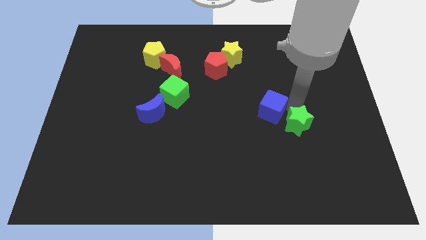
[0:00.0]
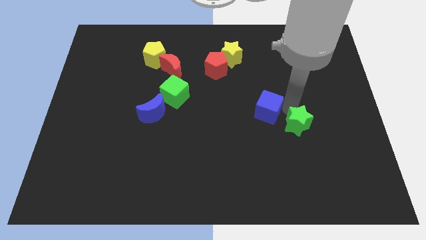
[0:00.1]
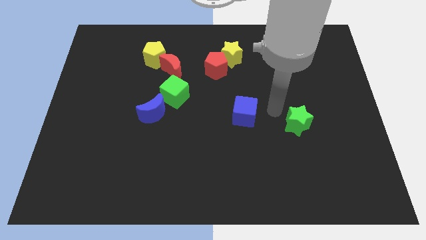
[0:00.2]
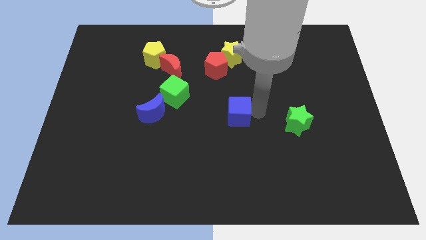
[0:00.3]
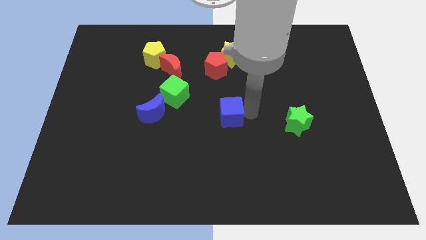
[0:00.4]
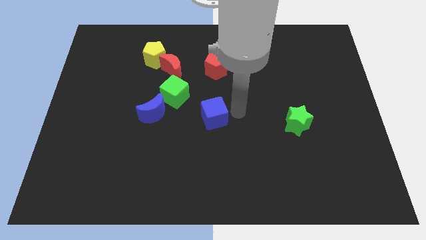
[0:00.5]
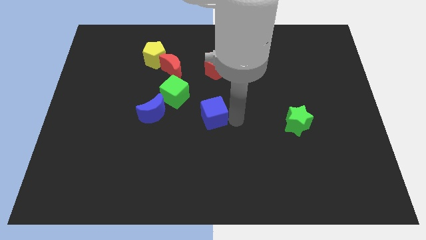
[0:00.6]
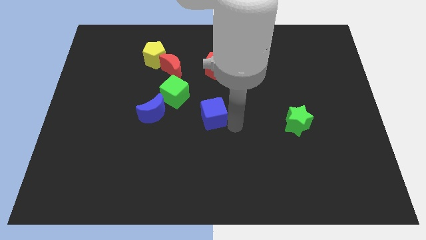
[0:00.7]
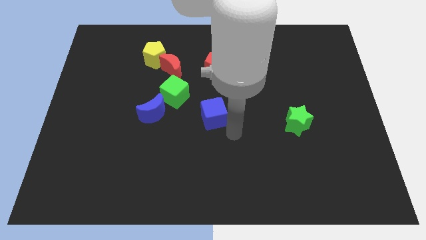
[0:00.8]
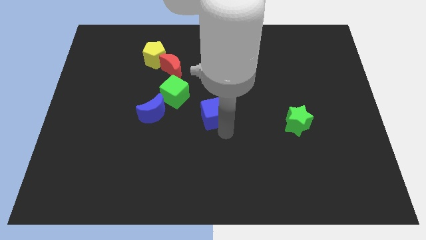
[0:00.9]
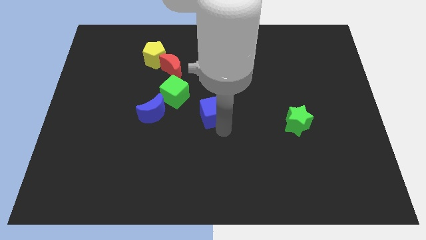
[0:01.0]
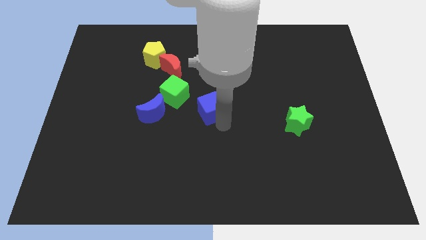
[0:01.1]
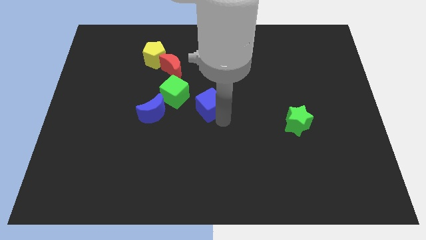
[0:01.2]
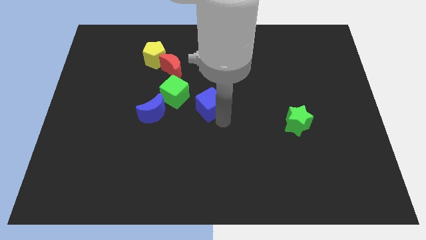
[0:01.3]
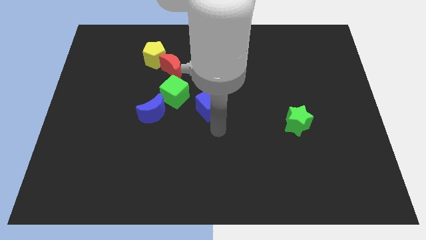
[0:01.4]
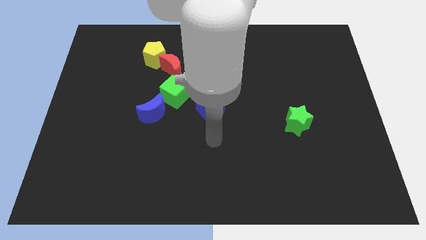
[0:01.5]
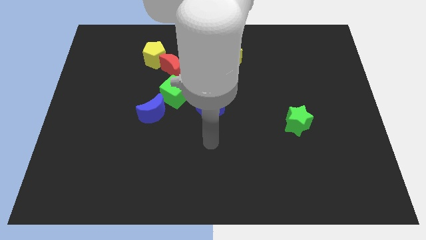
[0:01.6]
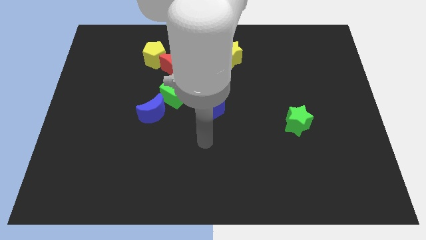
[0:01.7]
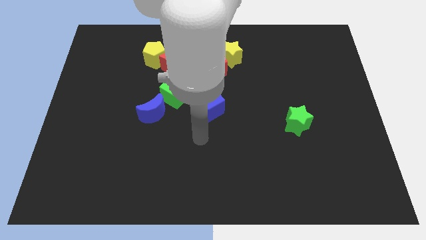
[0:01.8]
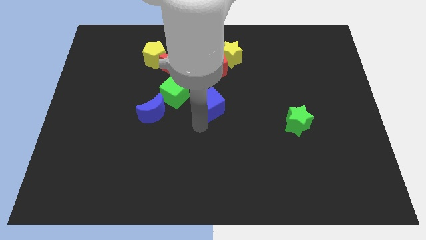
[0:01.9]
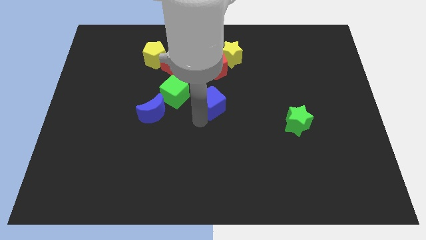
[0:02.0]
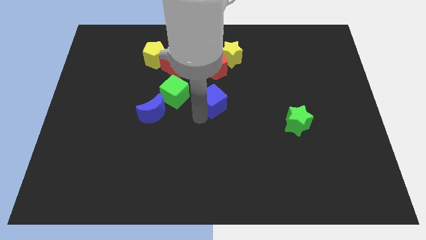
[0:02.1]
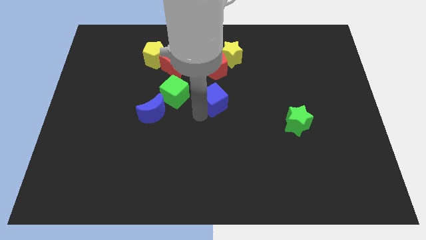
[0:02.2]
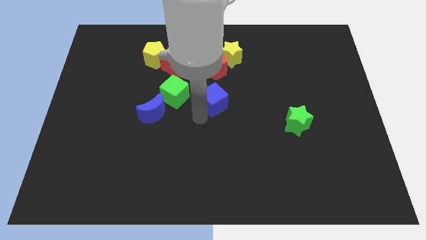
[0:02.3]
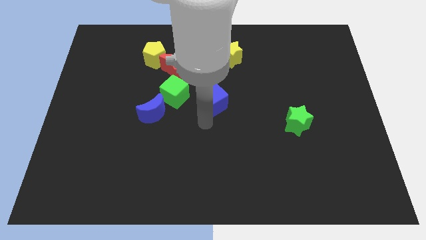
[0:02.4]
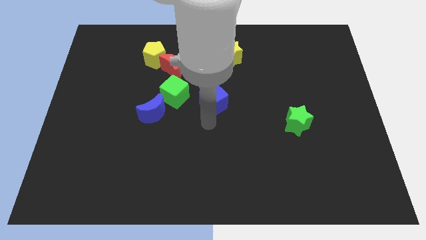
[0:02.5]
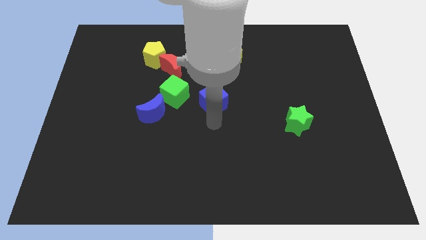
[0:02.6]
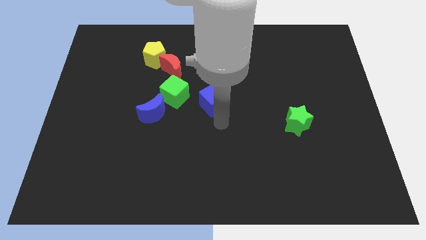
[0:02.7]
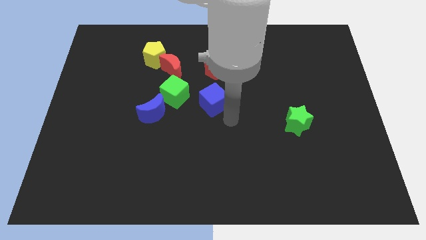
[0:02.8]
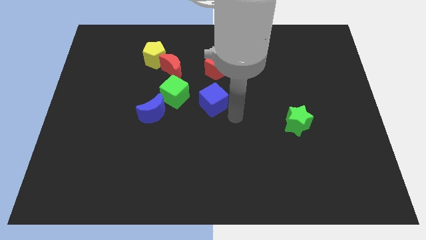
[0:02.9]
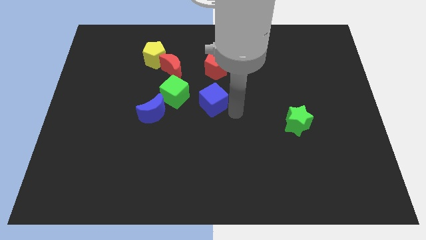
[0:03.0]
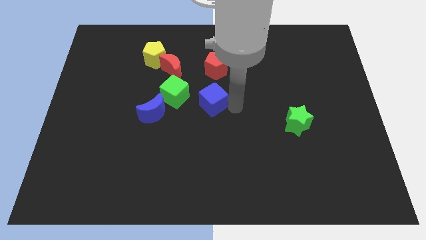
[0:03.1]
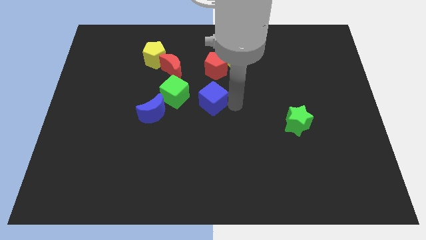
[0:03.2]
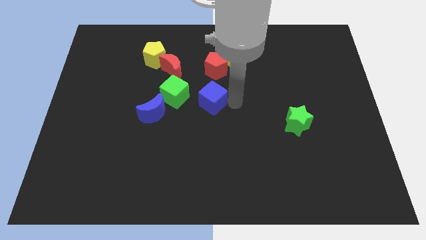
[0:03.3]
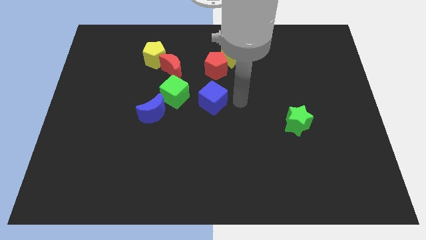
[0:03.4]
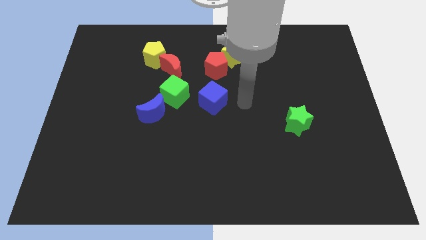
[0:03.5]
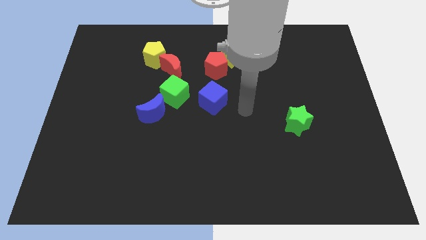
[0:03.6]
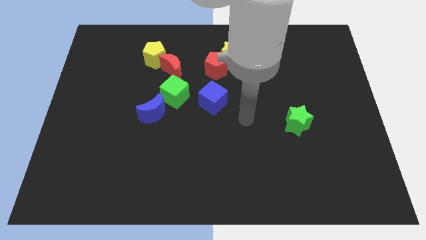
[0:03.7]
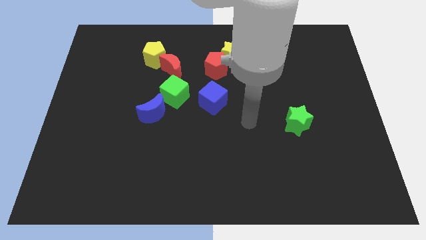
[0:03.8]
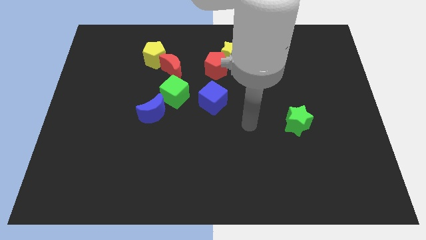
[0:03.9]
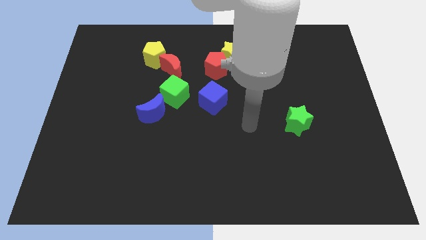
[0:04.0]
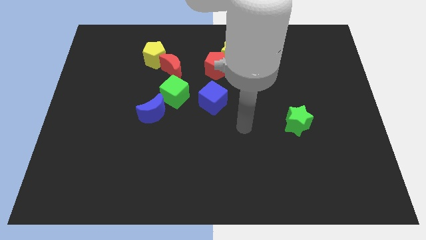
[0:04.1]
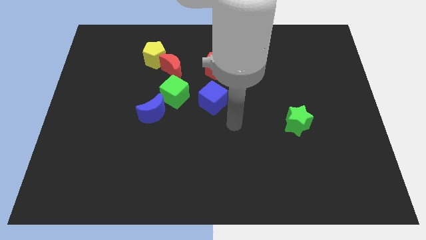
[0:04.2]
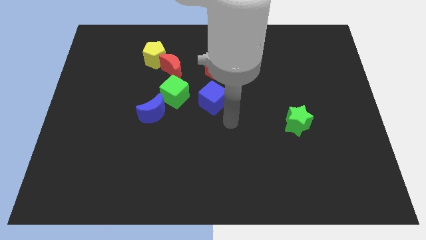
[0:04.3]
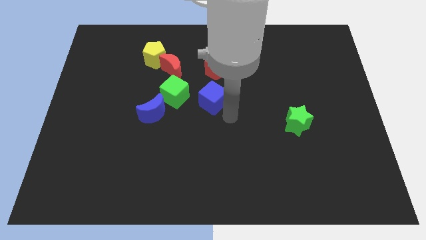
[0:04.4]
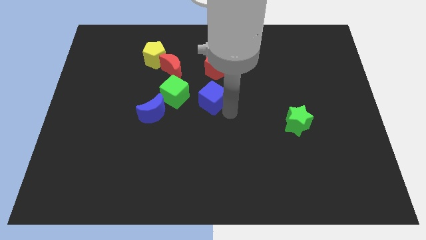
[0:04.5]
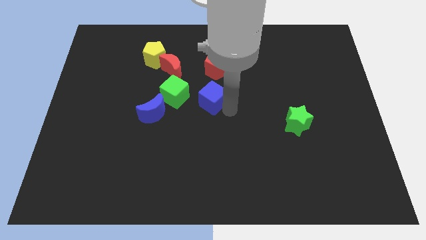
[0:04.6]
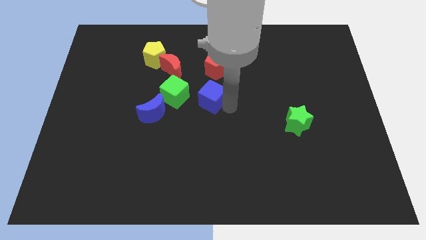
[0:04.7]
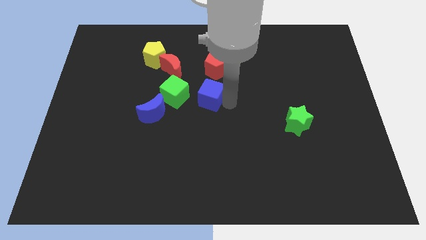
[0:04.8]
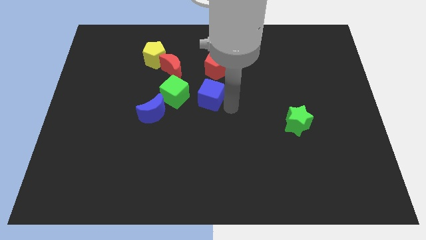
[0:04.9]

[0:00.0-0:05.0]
move the blue cube to the right side of the green cube

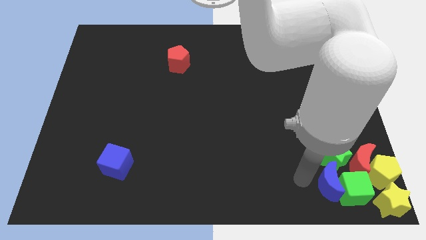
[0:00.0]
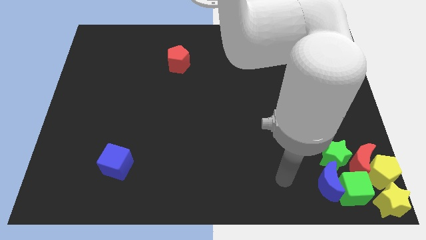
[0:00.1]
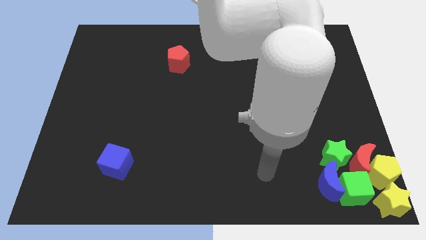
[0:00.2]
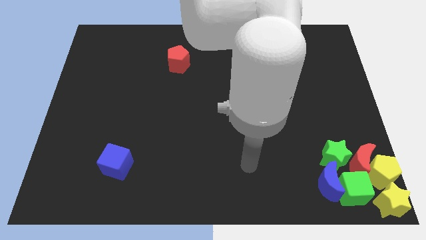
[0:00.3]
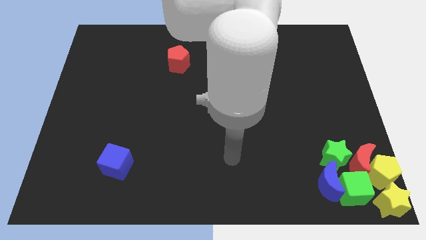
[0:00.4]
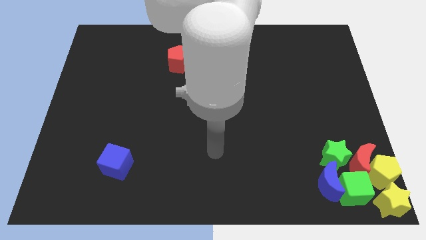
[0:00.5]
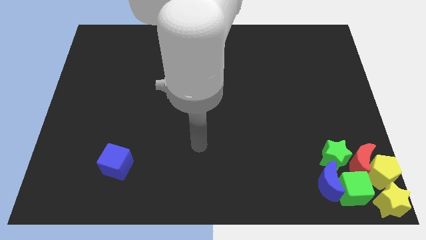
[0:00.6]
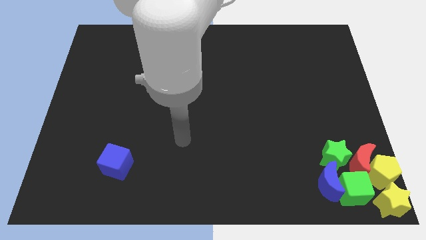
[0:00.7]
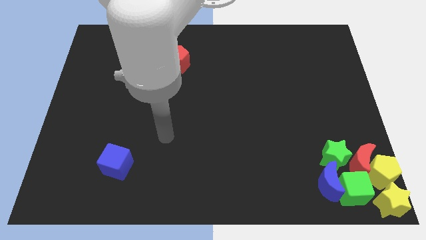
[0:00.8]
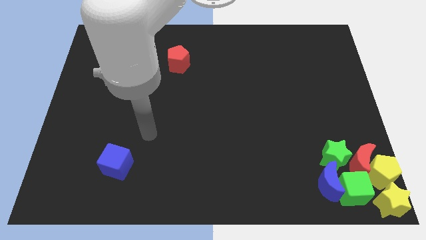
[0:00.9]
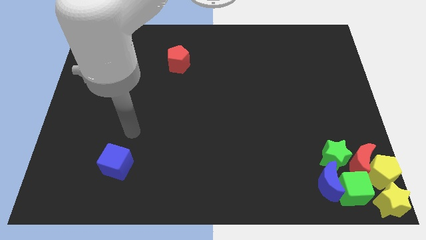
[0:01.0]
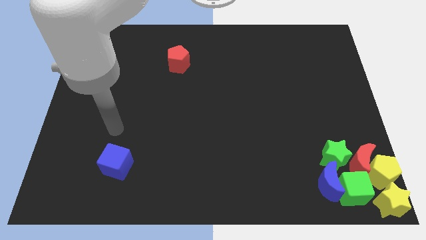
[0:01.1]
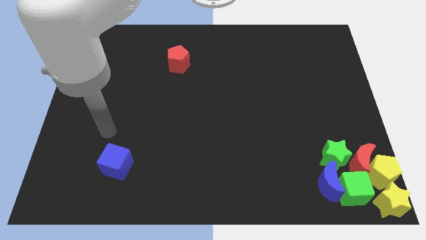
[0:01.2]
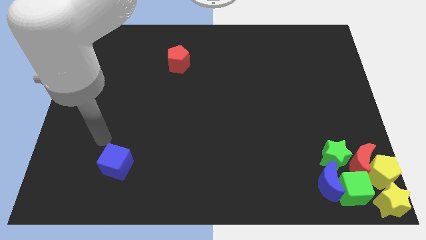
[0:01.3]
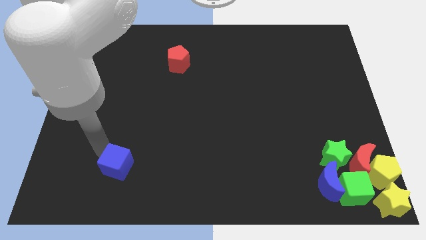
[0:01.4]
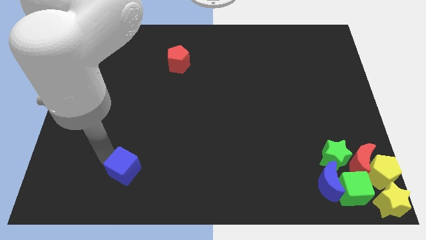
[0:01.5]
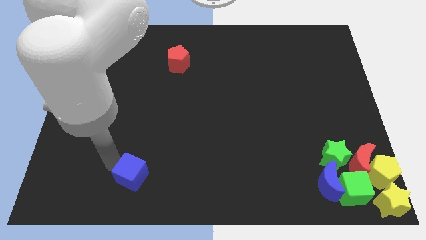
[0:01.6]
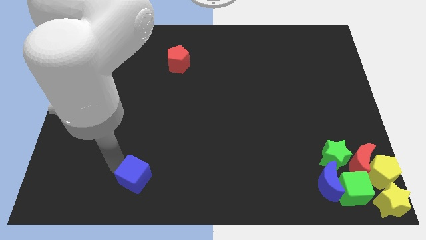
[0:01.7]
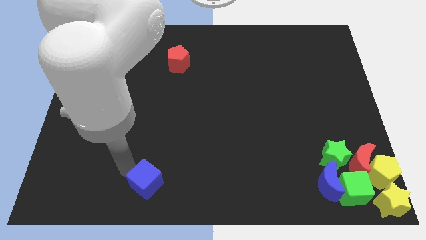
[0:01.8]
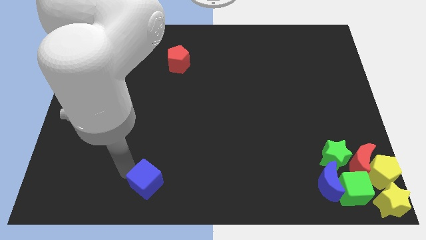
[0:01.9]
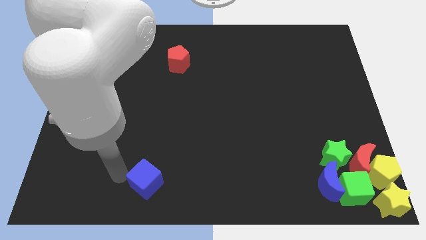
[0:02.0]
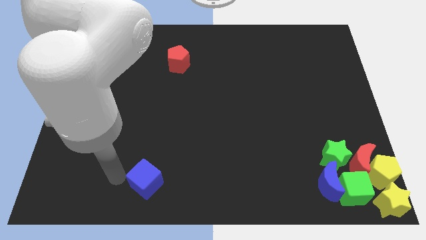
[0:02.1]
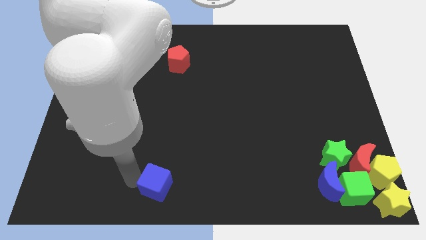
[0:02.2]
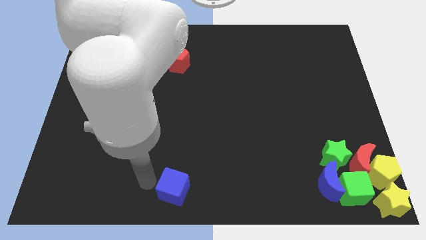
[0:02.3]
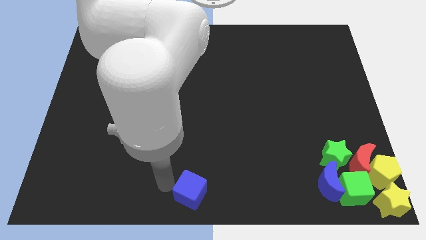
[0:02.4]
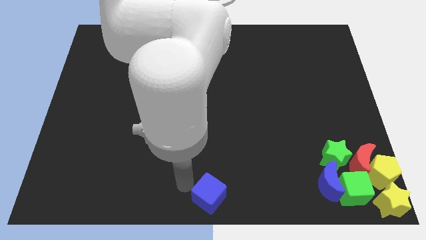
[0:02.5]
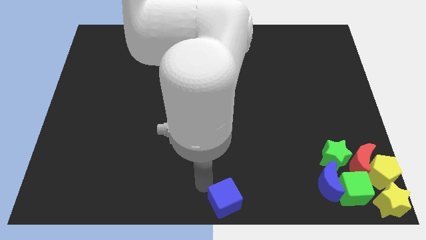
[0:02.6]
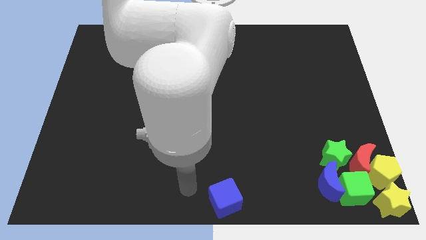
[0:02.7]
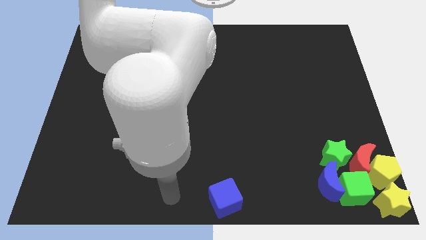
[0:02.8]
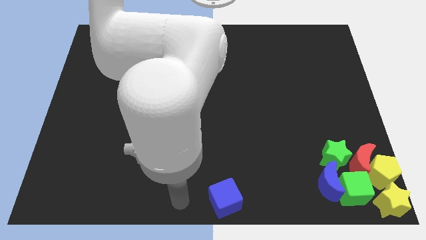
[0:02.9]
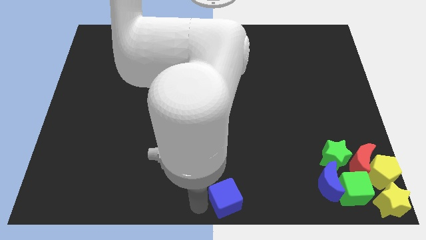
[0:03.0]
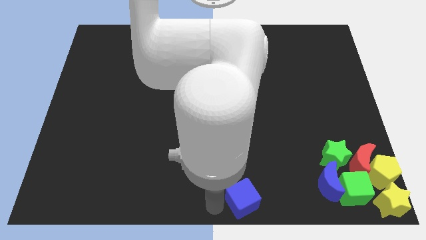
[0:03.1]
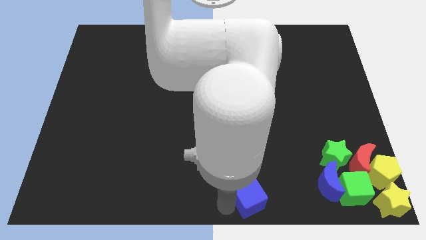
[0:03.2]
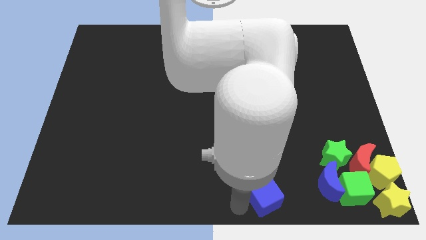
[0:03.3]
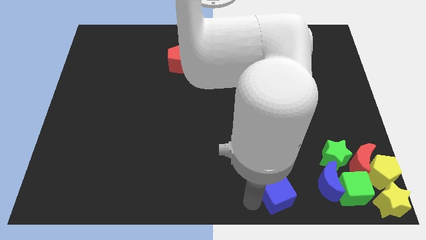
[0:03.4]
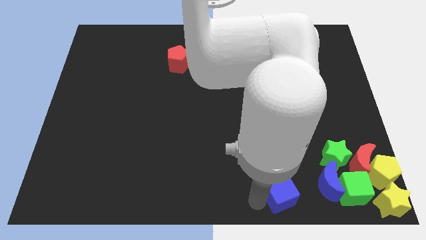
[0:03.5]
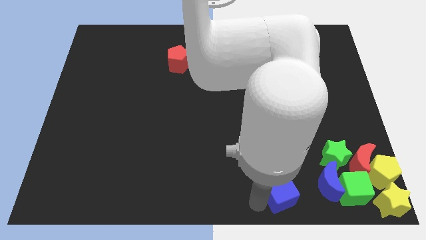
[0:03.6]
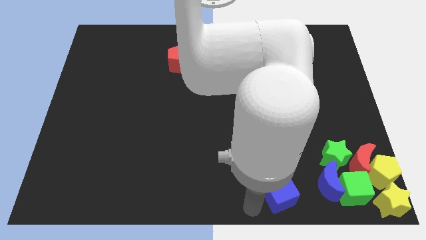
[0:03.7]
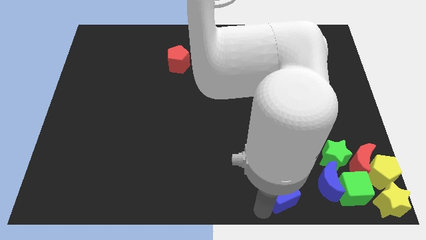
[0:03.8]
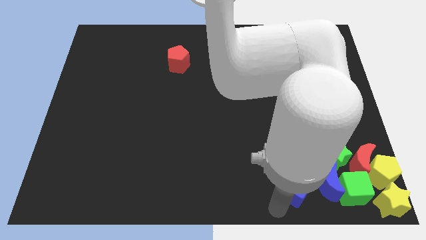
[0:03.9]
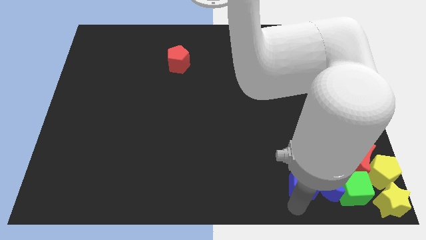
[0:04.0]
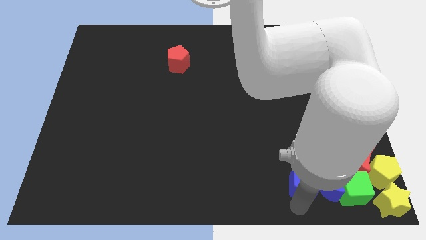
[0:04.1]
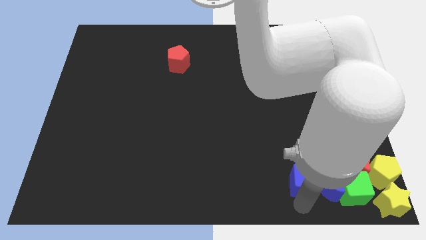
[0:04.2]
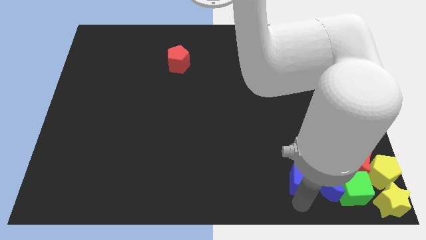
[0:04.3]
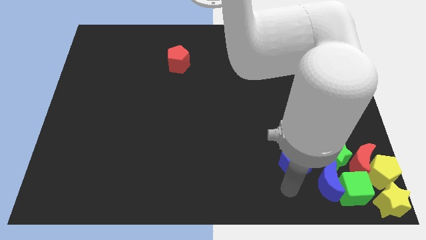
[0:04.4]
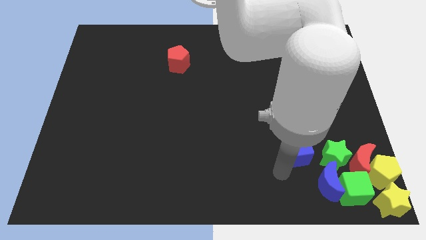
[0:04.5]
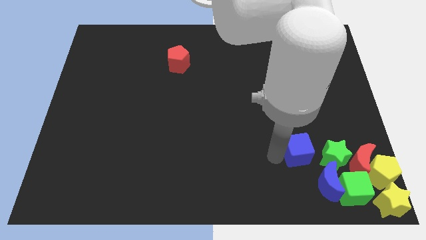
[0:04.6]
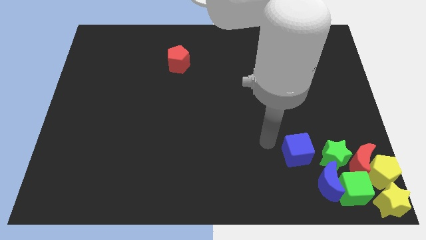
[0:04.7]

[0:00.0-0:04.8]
move the blue cube towards the left side of the green star
